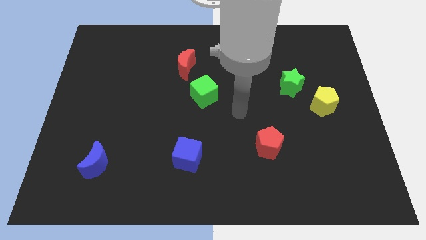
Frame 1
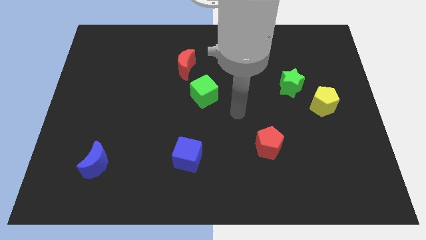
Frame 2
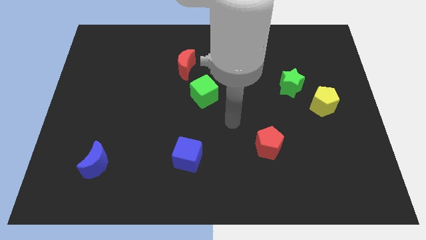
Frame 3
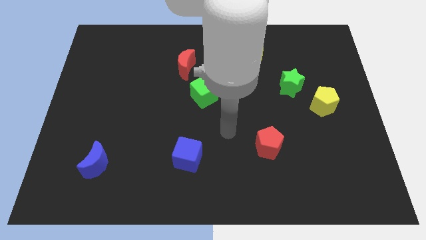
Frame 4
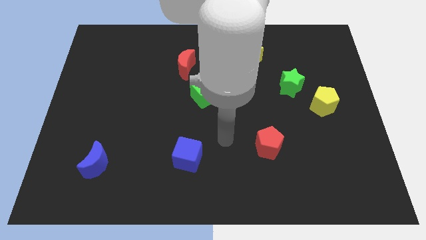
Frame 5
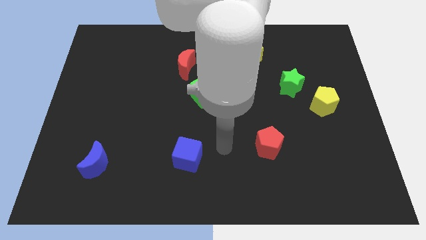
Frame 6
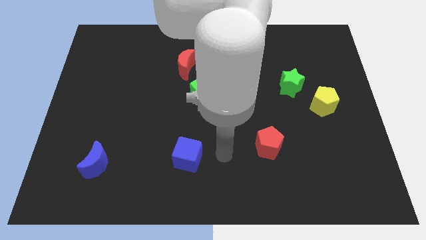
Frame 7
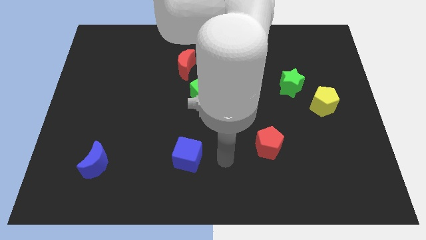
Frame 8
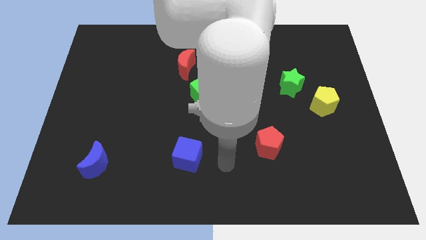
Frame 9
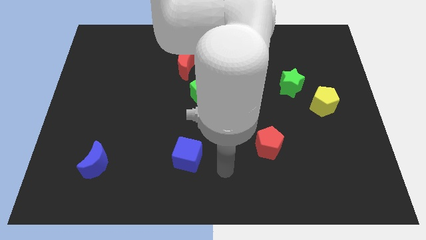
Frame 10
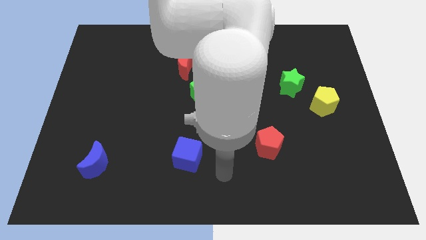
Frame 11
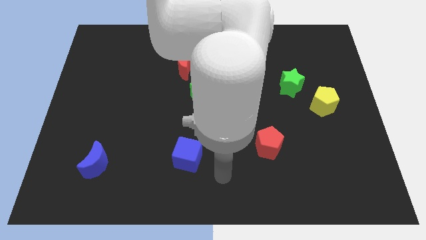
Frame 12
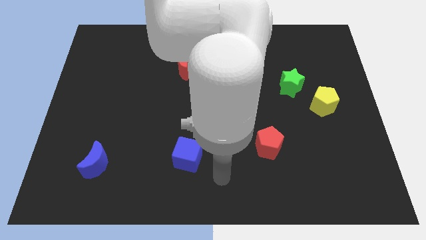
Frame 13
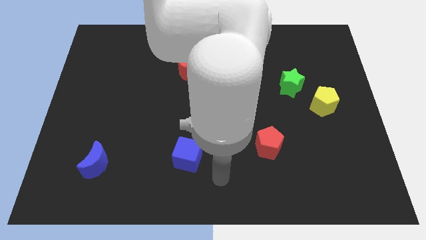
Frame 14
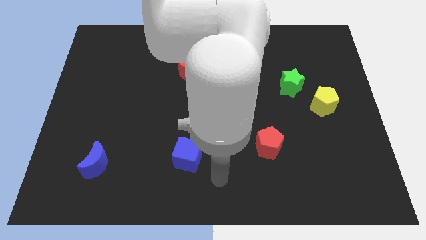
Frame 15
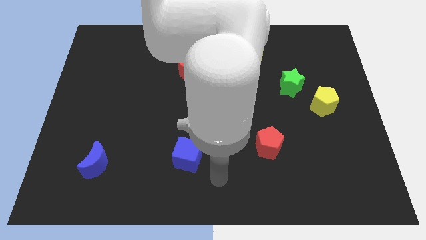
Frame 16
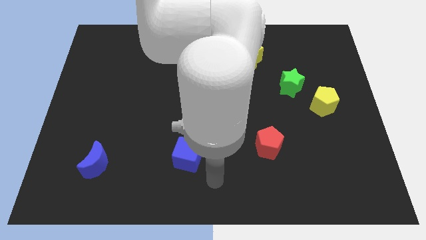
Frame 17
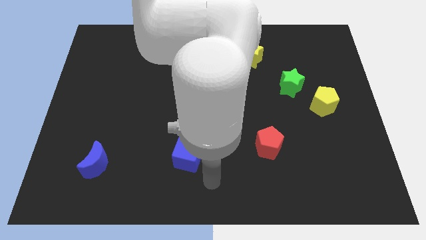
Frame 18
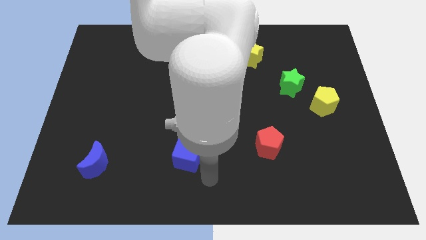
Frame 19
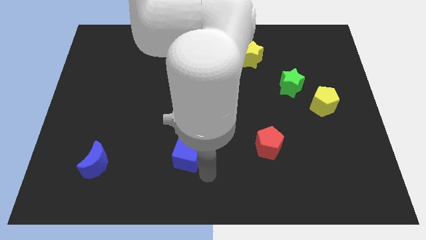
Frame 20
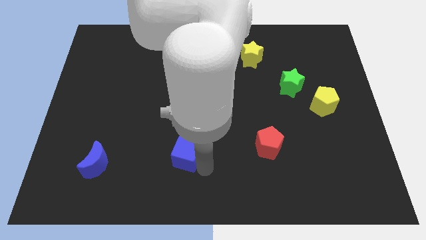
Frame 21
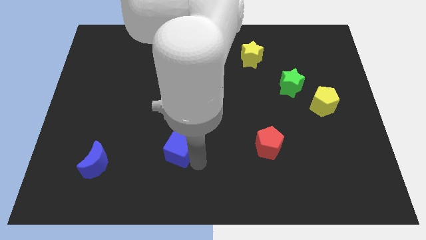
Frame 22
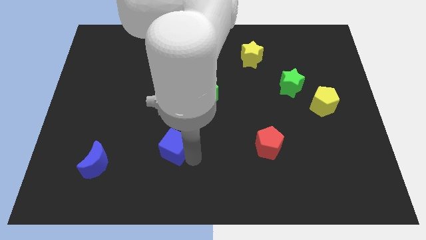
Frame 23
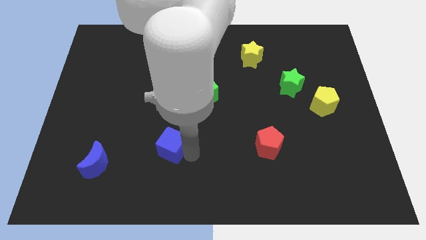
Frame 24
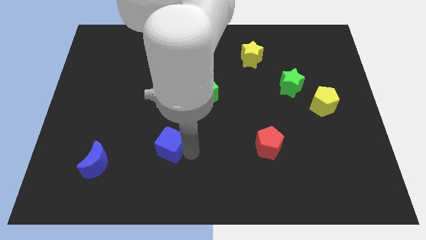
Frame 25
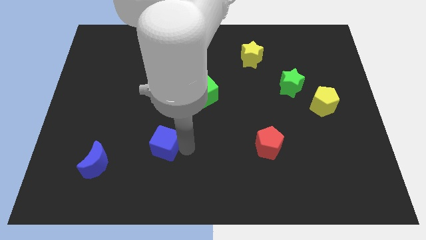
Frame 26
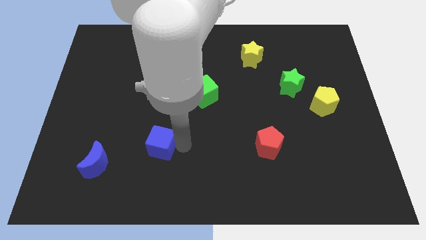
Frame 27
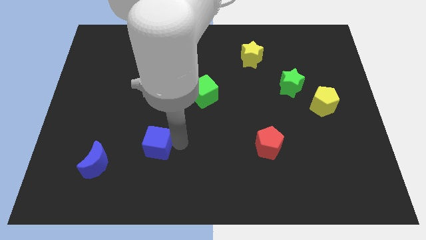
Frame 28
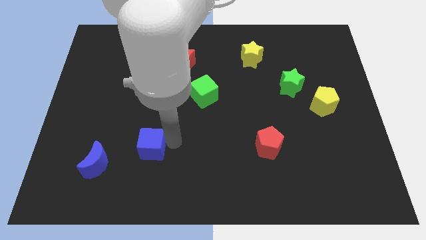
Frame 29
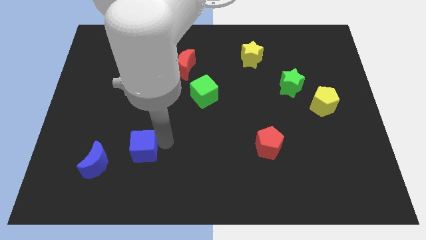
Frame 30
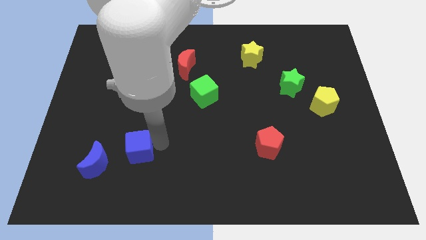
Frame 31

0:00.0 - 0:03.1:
drag the blue cube towards the right side of the blue moon

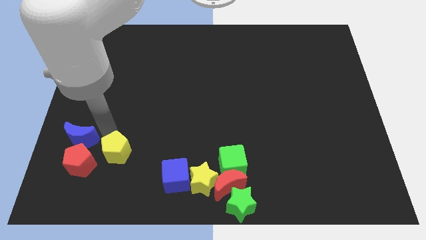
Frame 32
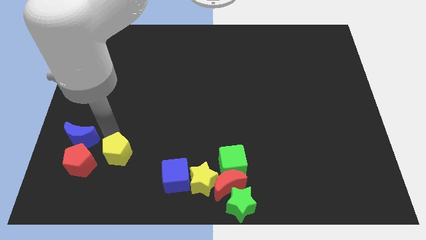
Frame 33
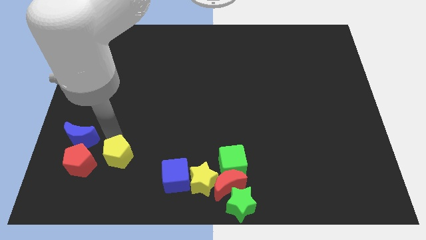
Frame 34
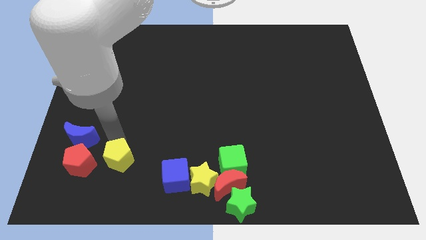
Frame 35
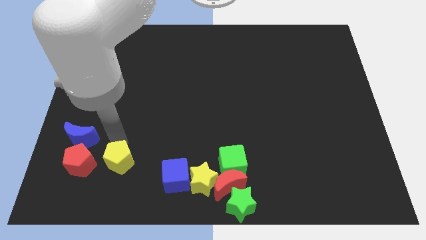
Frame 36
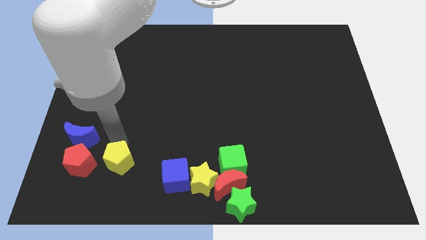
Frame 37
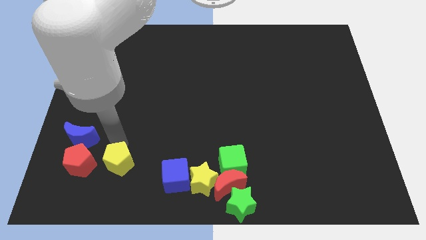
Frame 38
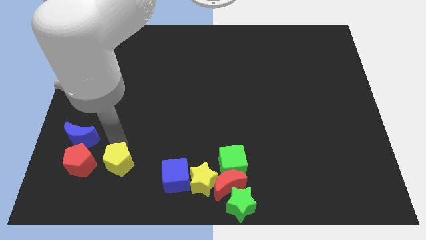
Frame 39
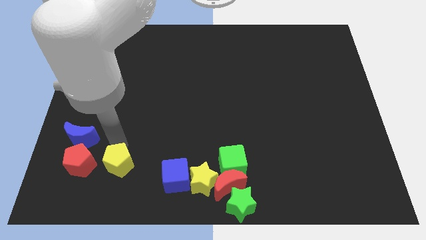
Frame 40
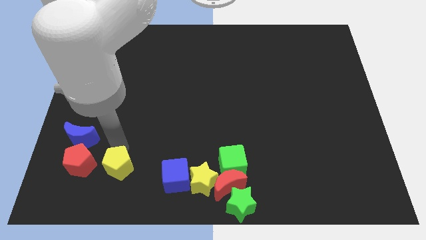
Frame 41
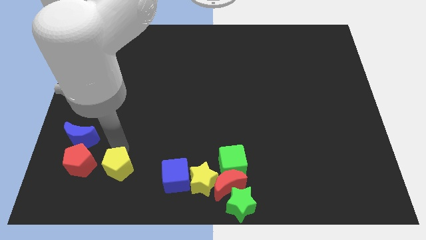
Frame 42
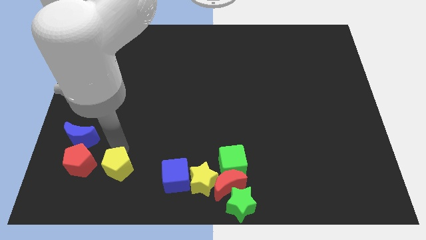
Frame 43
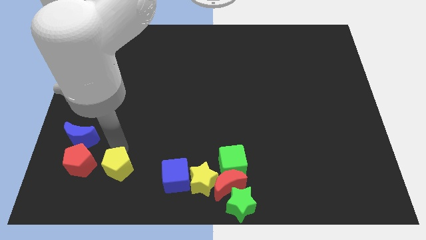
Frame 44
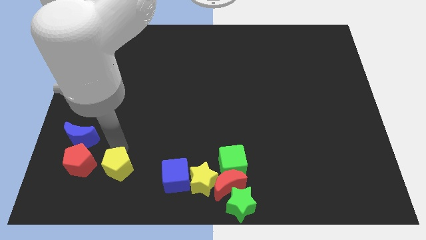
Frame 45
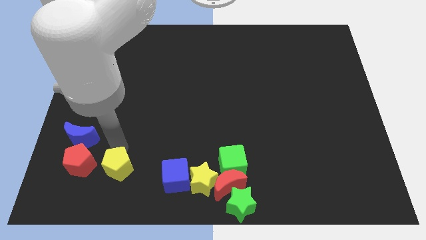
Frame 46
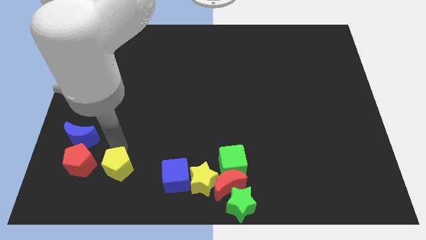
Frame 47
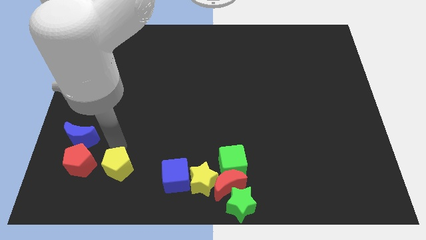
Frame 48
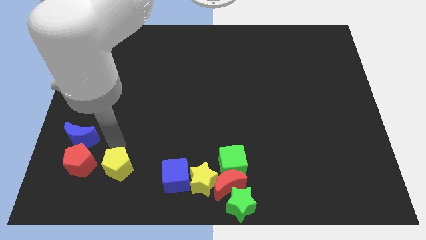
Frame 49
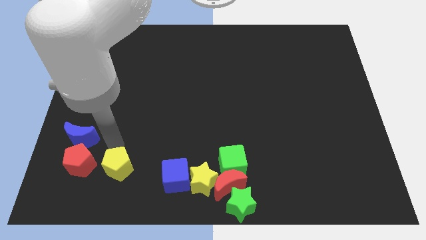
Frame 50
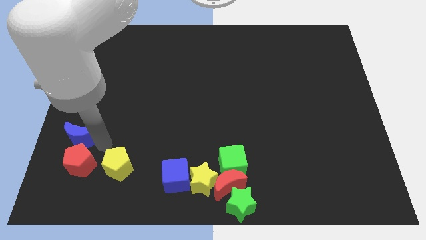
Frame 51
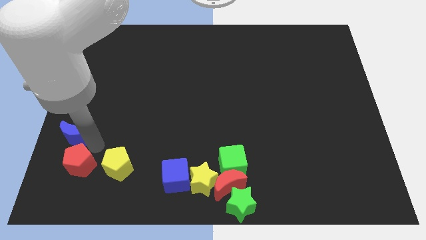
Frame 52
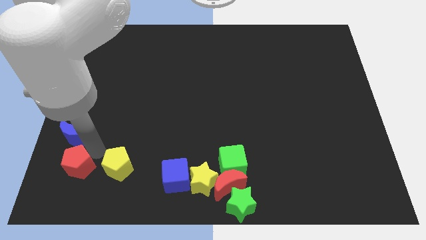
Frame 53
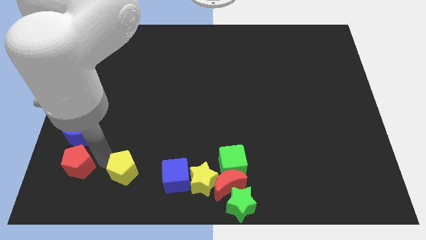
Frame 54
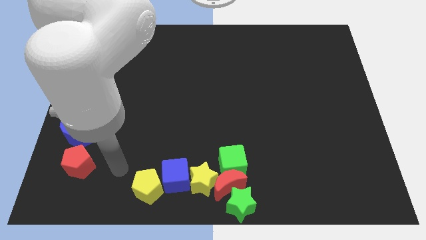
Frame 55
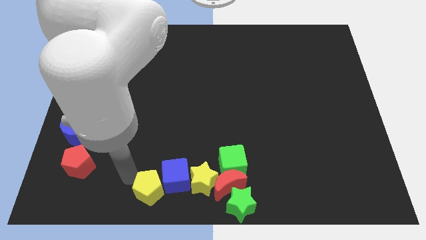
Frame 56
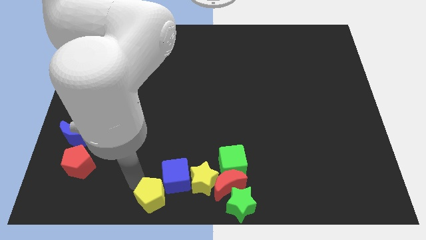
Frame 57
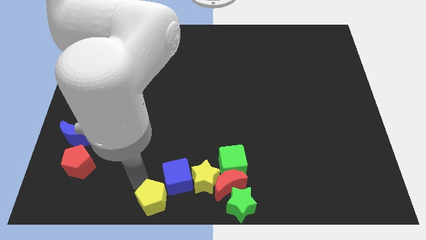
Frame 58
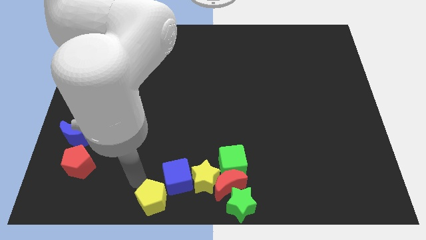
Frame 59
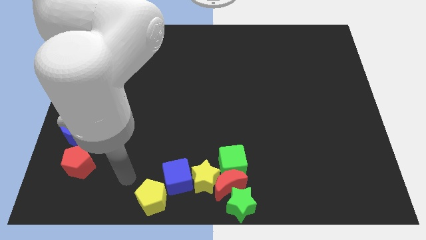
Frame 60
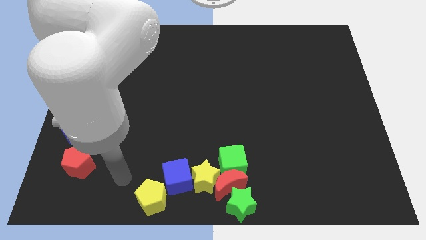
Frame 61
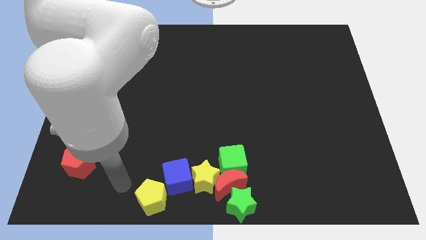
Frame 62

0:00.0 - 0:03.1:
slide yellow pentagon to the left of the blue cube

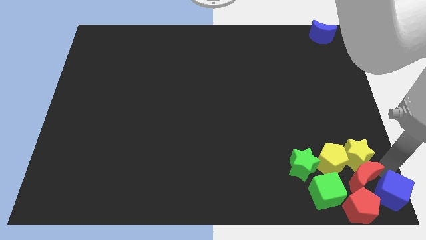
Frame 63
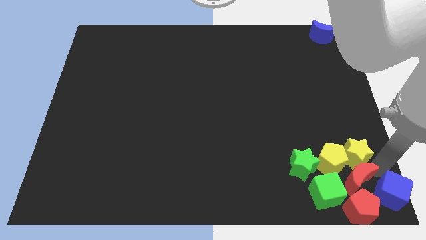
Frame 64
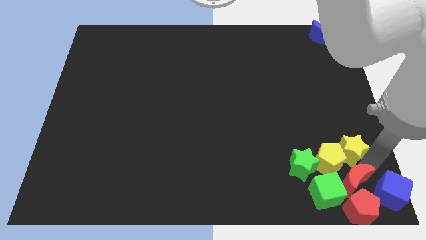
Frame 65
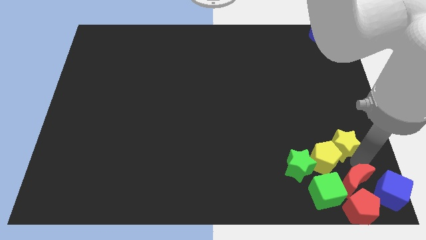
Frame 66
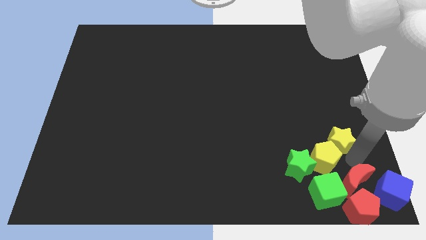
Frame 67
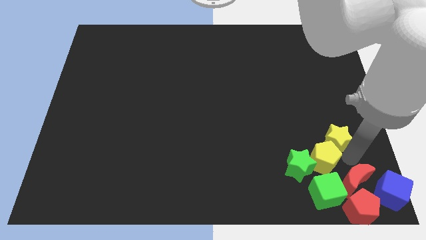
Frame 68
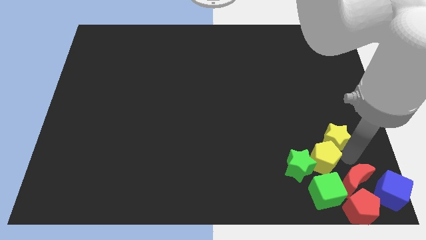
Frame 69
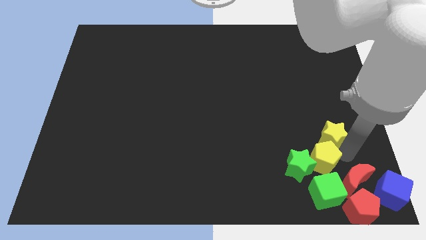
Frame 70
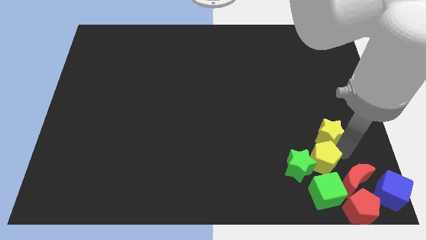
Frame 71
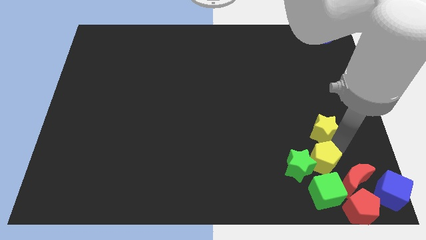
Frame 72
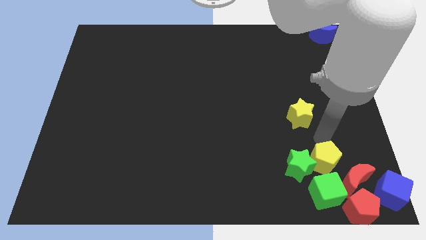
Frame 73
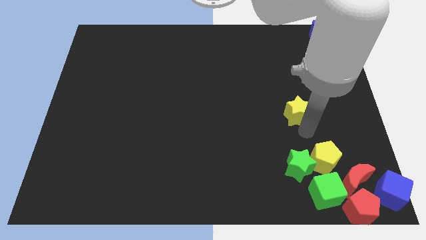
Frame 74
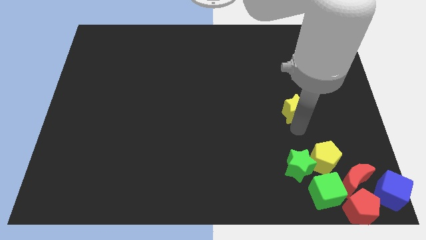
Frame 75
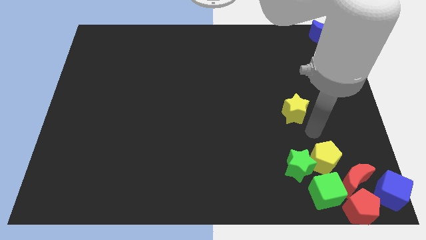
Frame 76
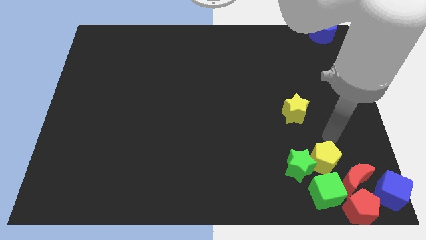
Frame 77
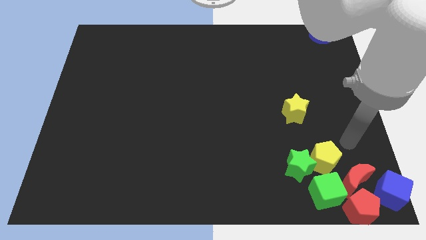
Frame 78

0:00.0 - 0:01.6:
separate the yellow star from the yellow pentagon

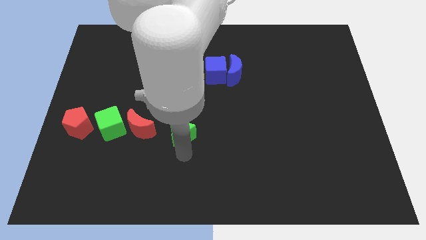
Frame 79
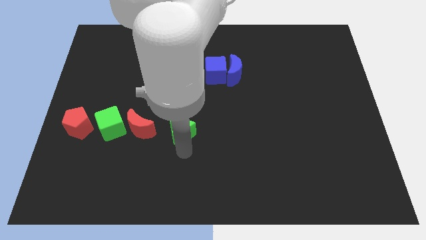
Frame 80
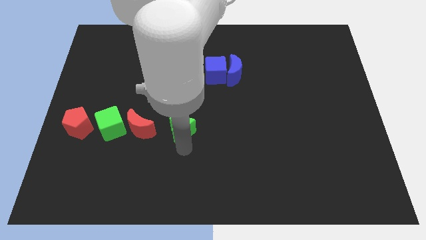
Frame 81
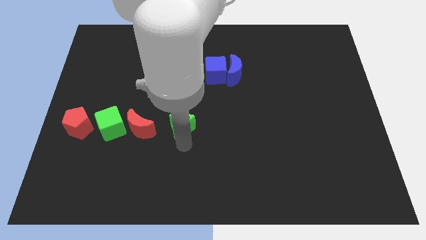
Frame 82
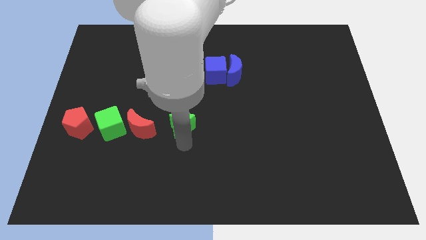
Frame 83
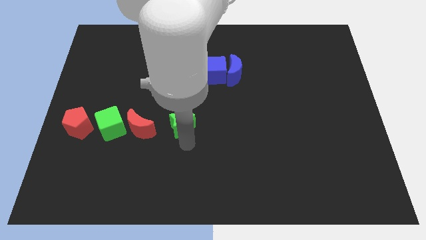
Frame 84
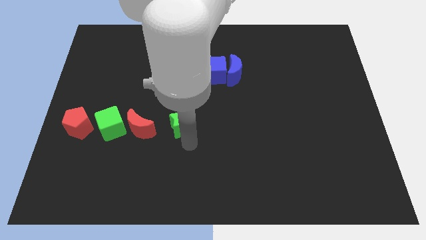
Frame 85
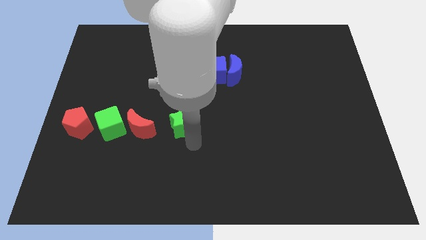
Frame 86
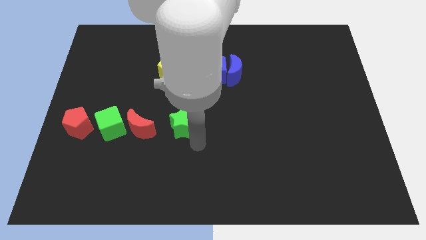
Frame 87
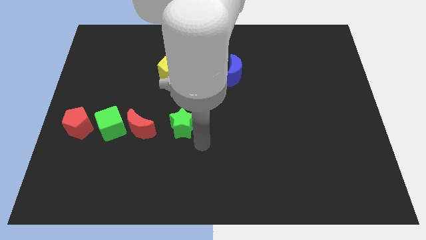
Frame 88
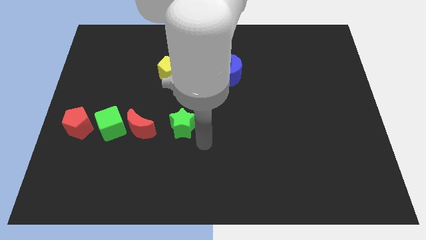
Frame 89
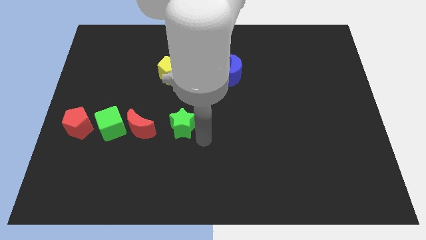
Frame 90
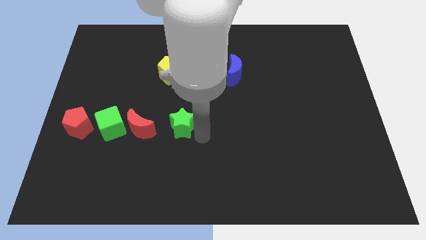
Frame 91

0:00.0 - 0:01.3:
move the green star towards up a bit

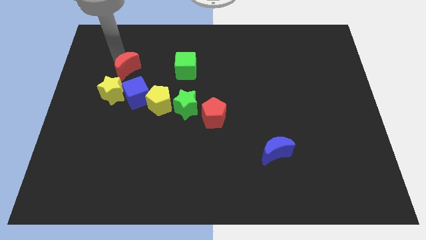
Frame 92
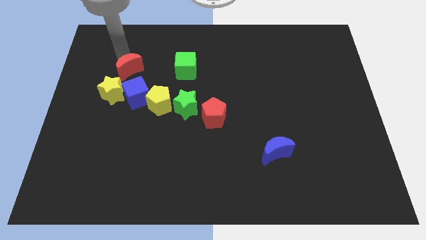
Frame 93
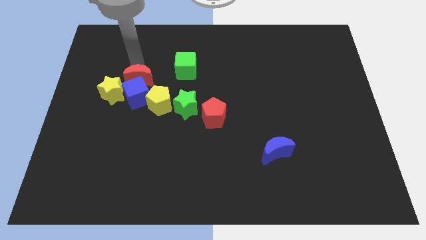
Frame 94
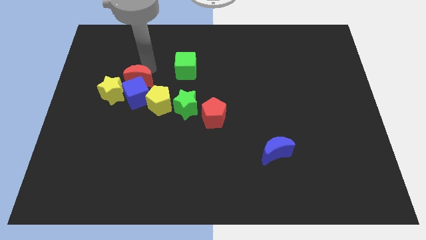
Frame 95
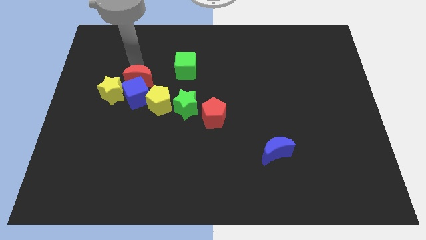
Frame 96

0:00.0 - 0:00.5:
place the red crescent above the blue cube
